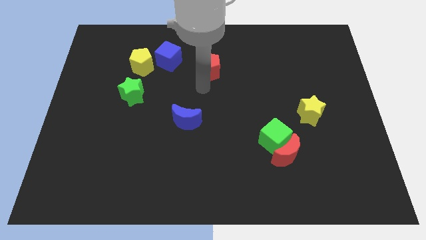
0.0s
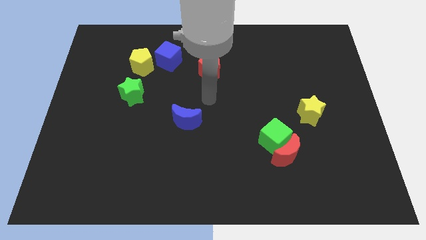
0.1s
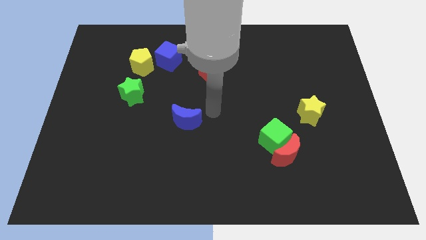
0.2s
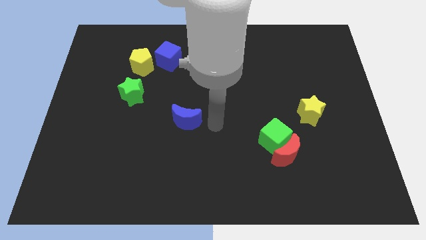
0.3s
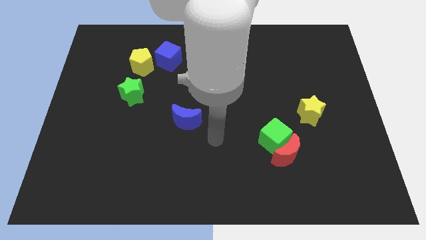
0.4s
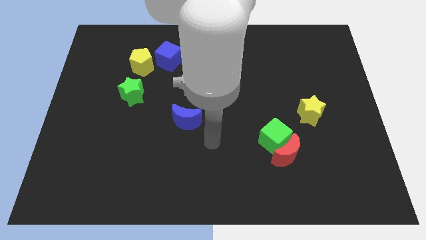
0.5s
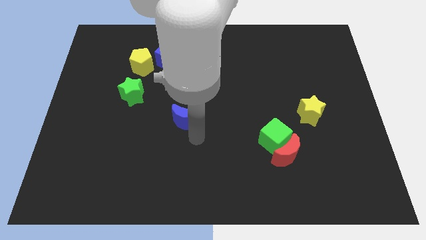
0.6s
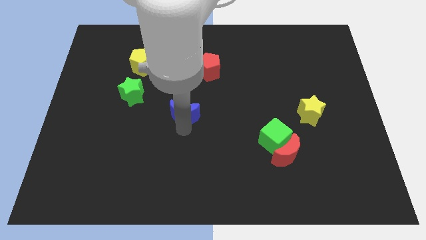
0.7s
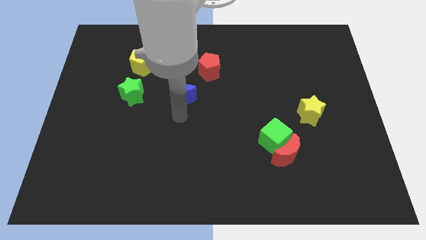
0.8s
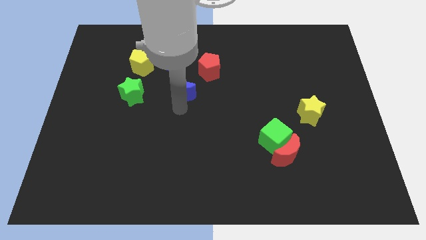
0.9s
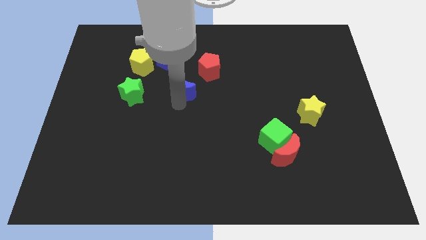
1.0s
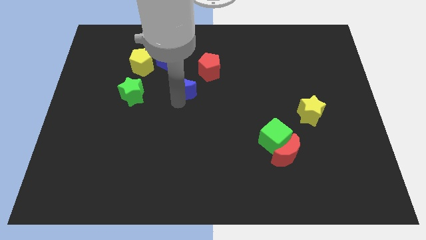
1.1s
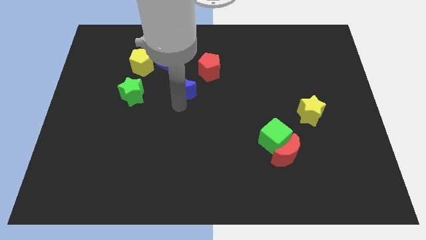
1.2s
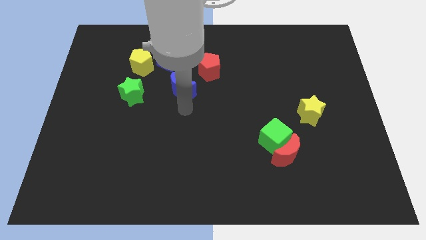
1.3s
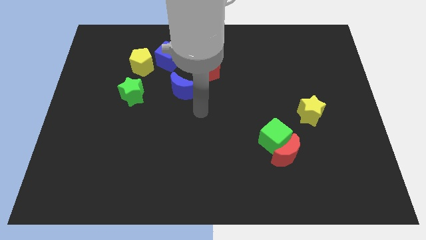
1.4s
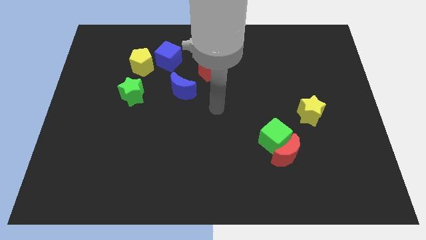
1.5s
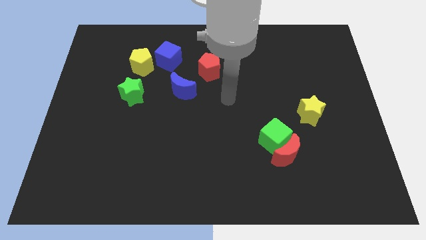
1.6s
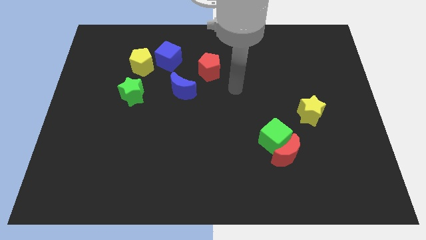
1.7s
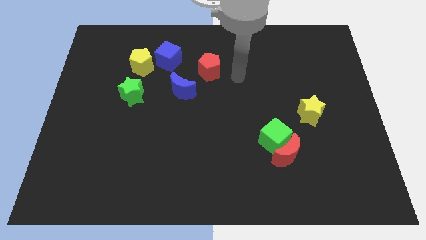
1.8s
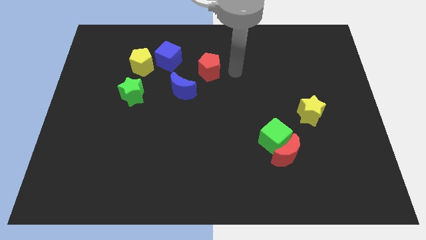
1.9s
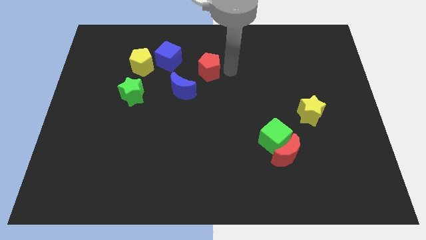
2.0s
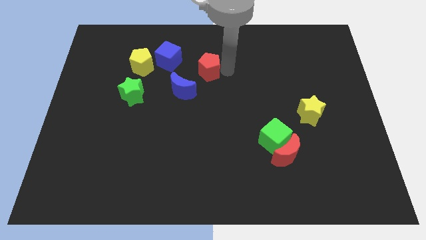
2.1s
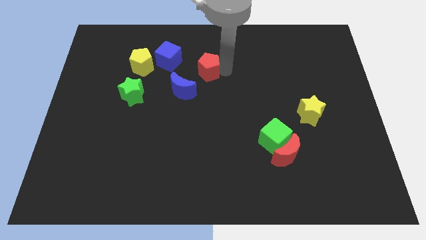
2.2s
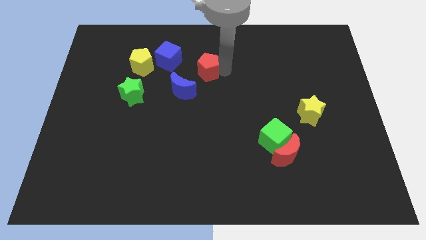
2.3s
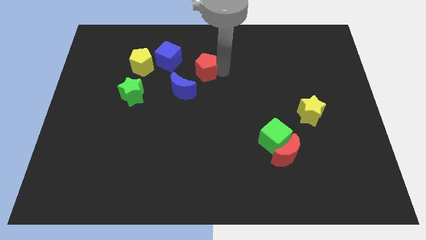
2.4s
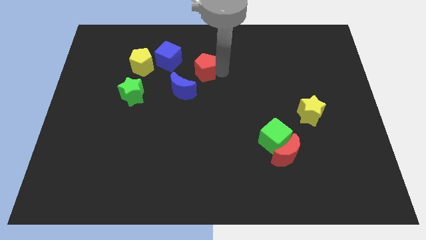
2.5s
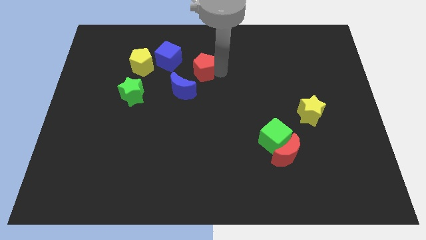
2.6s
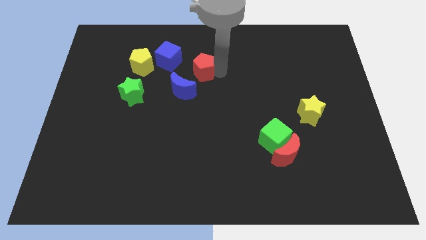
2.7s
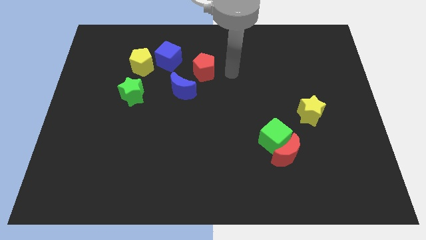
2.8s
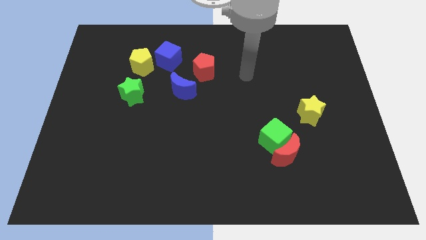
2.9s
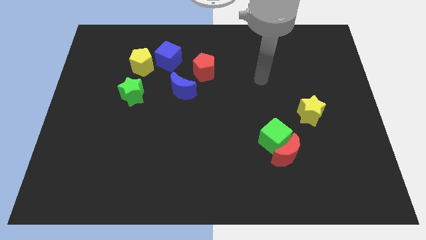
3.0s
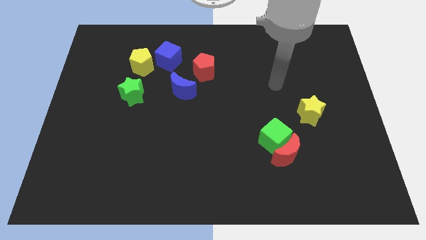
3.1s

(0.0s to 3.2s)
adjust the blue crescent and the red pentagon in a diagonal line

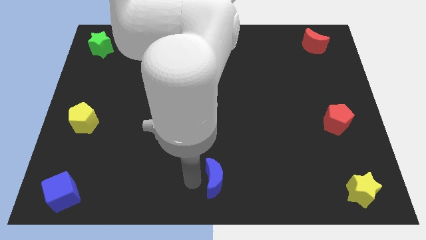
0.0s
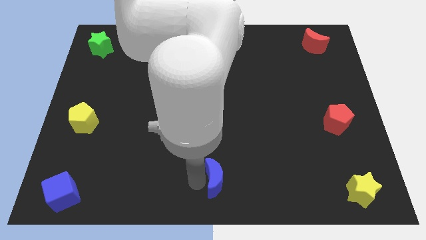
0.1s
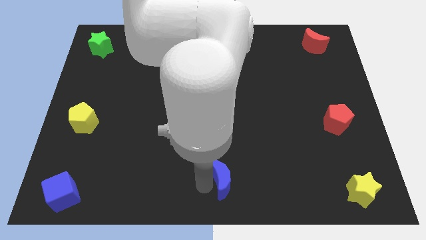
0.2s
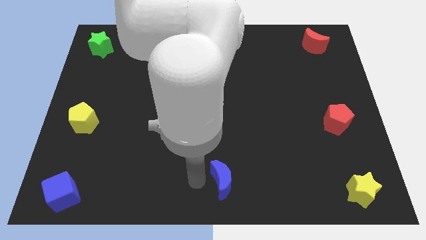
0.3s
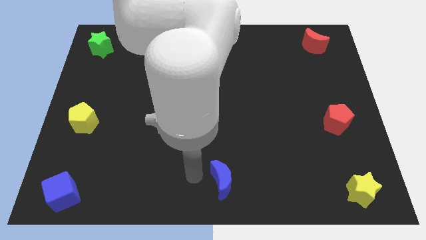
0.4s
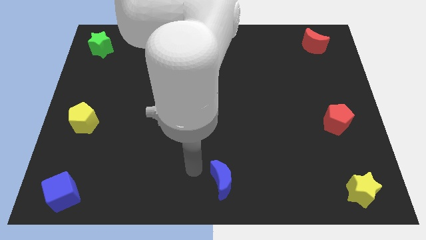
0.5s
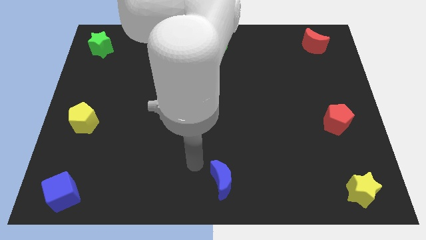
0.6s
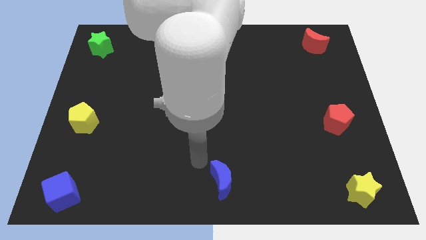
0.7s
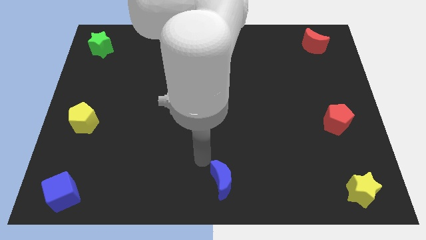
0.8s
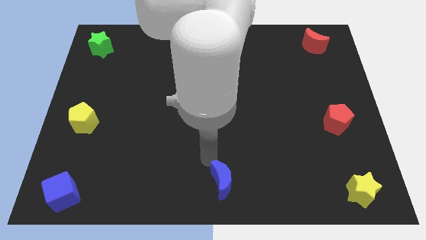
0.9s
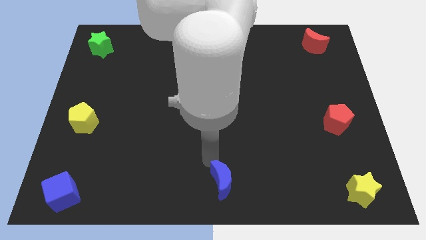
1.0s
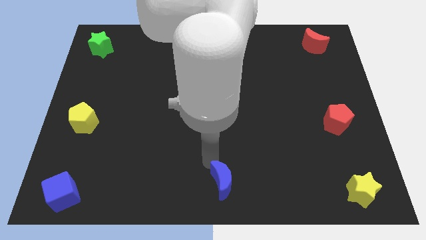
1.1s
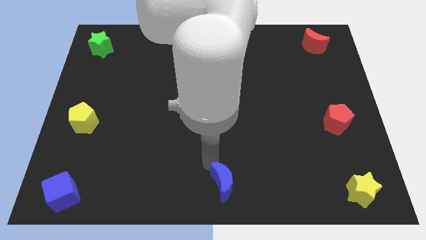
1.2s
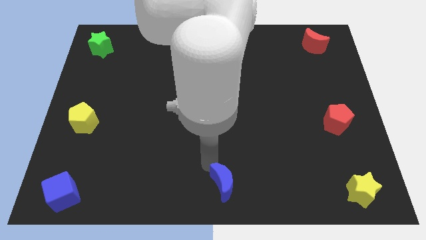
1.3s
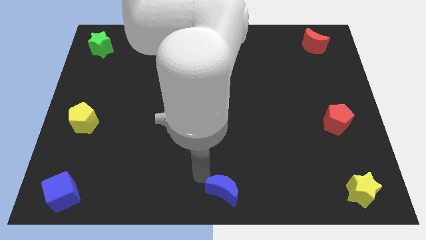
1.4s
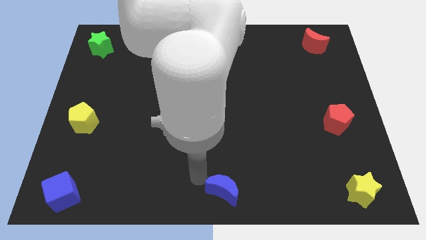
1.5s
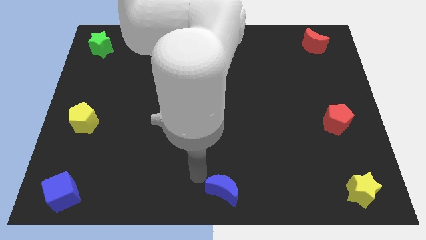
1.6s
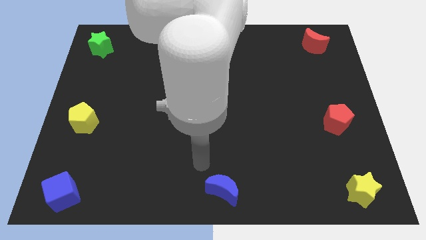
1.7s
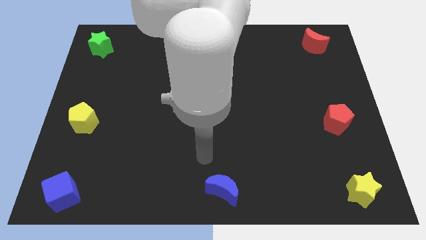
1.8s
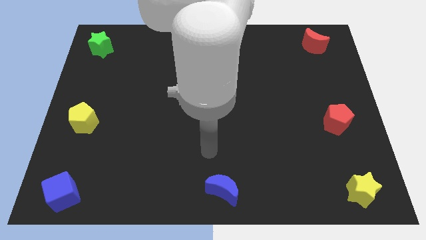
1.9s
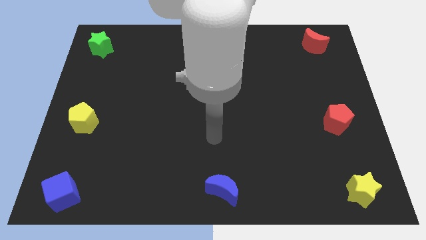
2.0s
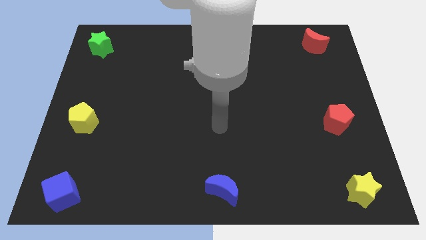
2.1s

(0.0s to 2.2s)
place the blue cube at the bottom center of the board

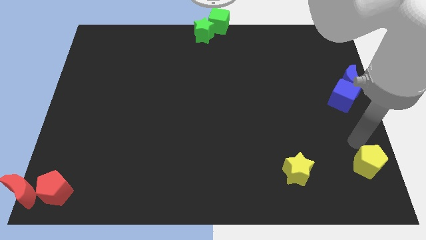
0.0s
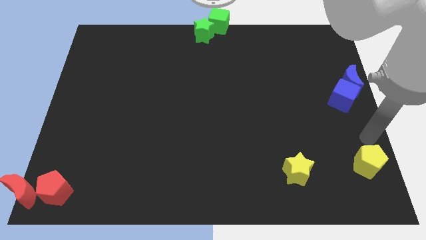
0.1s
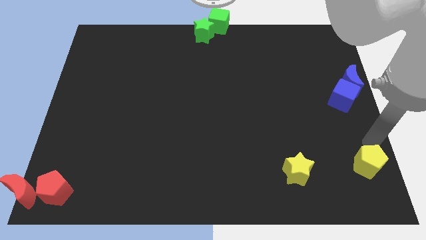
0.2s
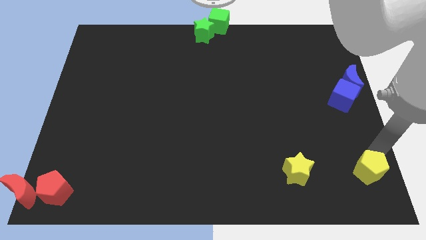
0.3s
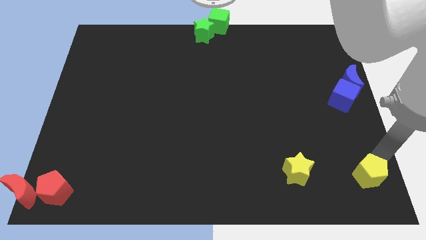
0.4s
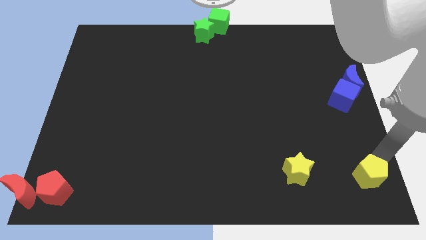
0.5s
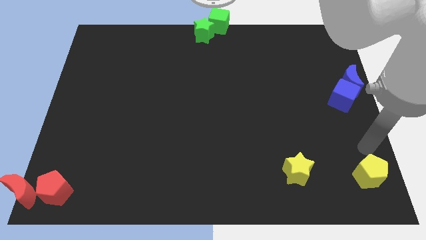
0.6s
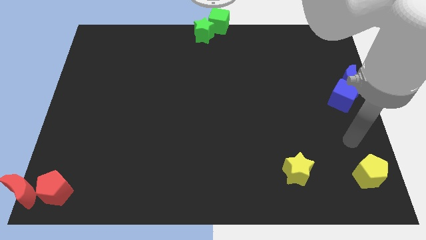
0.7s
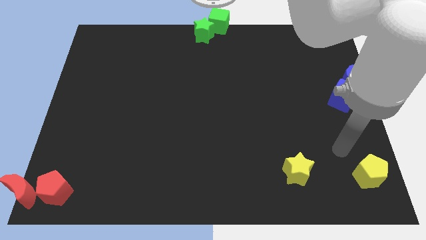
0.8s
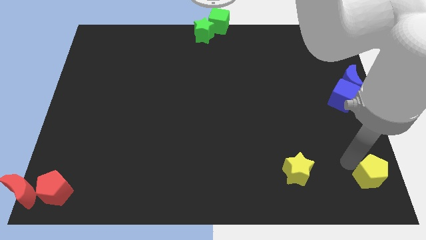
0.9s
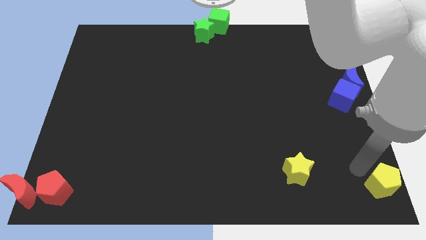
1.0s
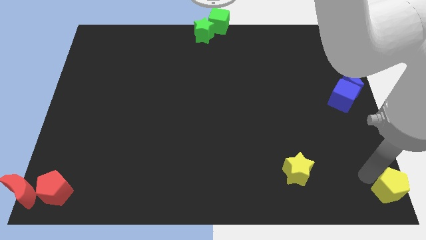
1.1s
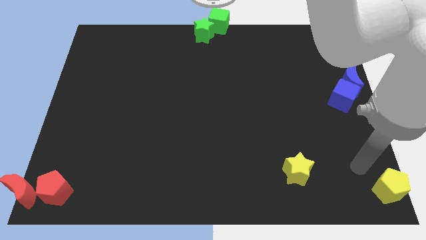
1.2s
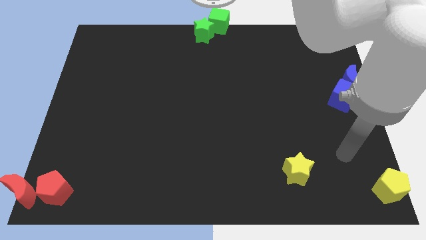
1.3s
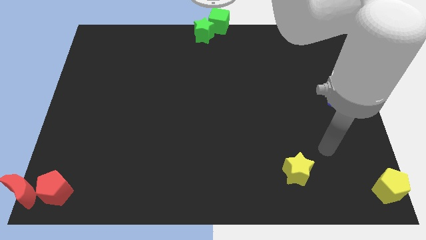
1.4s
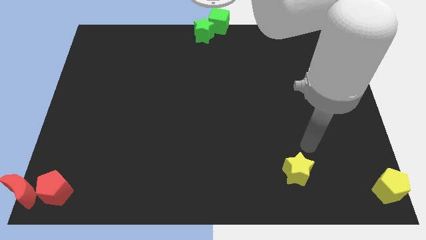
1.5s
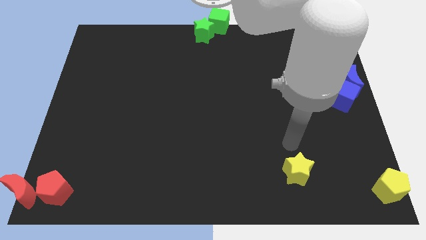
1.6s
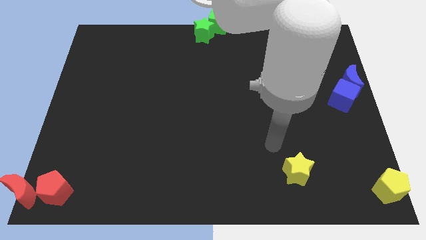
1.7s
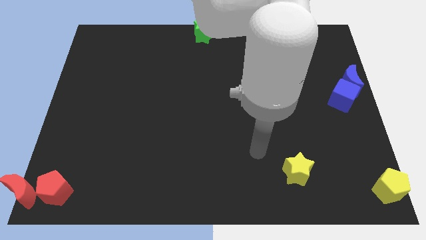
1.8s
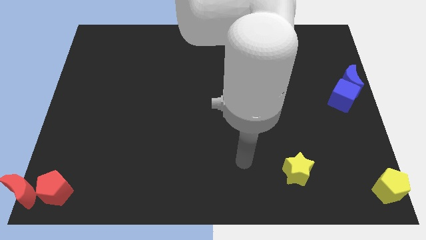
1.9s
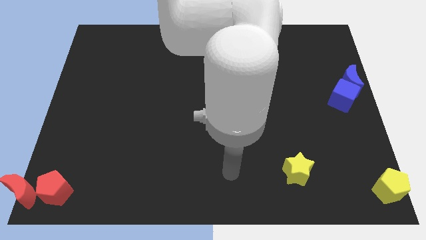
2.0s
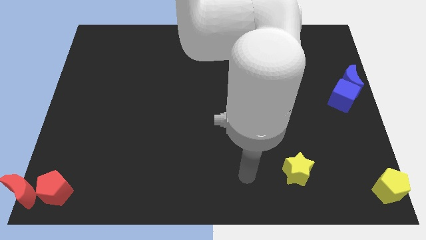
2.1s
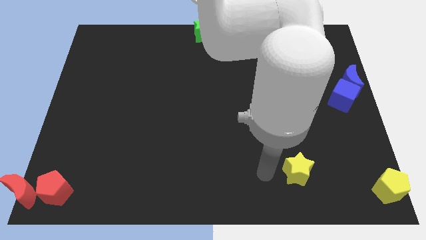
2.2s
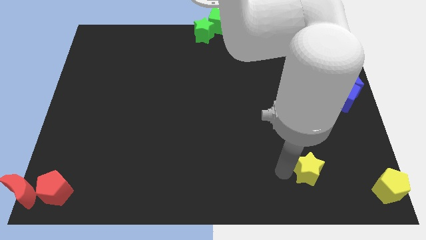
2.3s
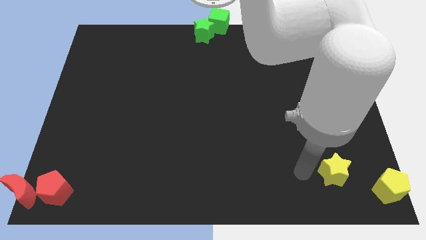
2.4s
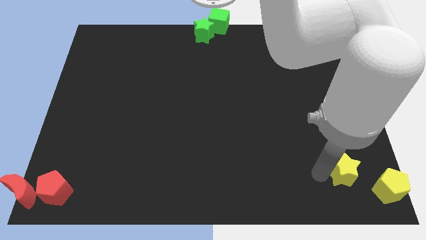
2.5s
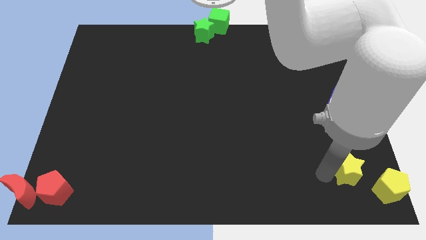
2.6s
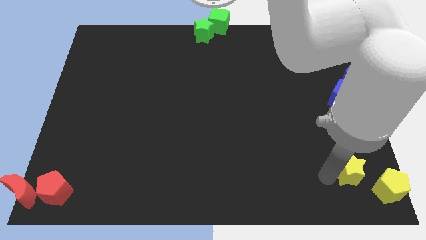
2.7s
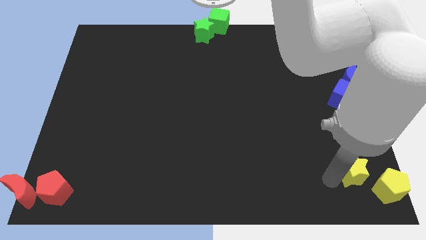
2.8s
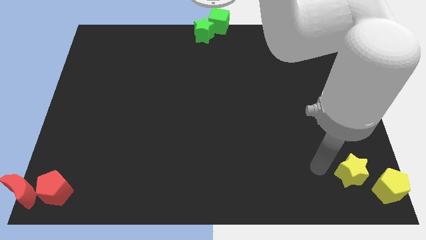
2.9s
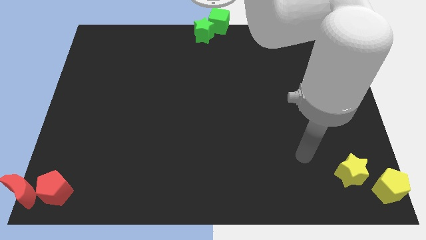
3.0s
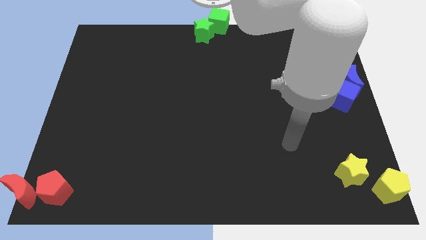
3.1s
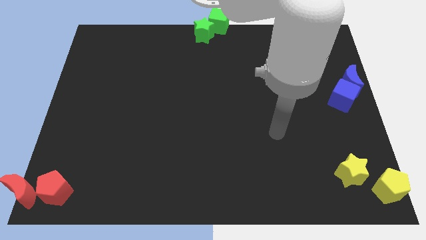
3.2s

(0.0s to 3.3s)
move the yellow blocks to the bottom right side of the board
